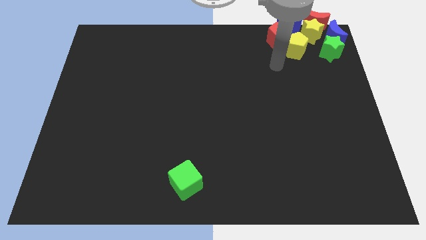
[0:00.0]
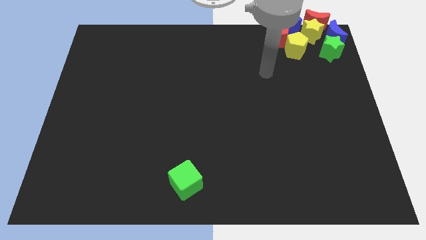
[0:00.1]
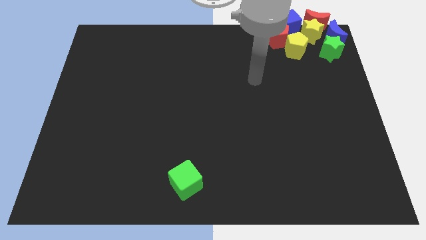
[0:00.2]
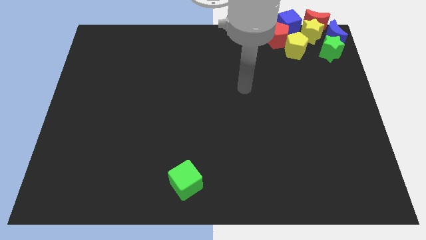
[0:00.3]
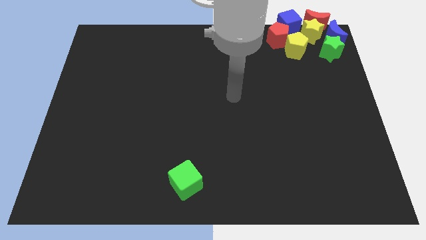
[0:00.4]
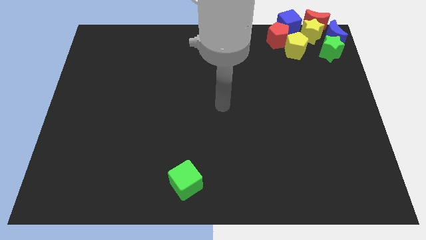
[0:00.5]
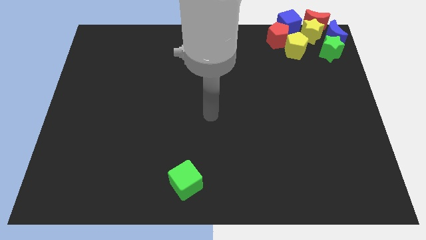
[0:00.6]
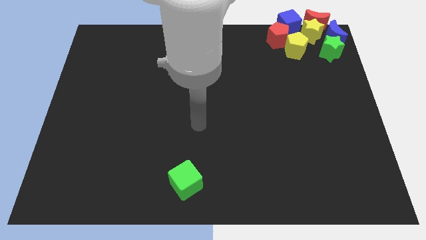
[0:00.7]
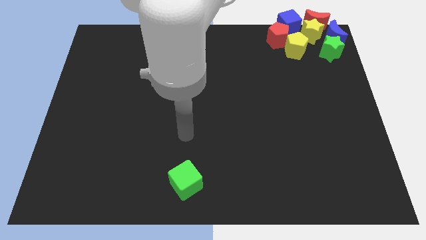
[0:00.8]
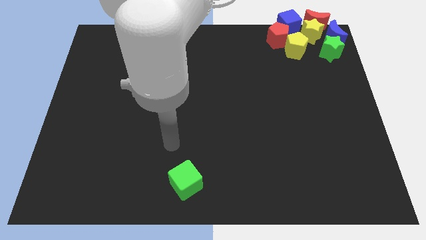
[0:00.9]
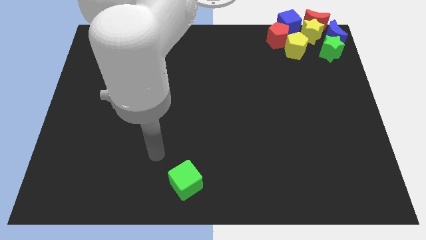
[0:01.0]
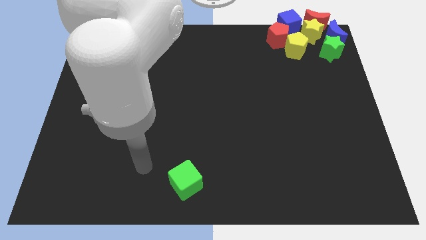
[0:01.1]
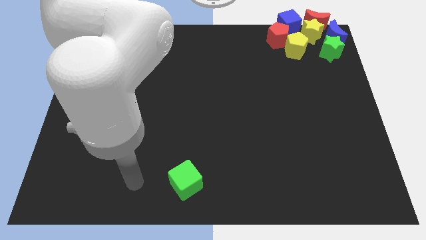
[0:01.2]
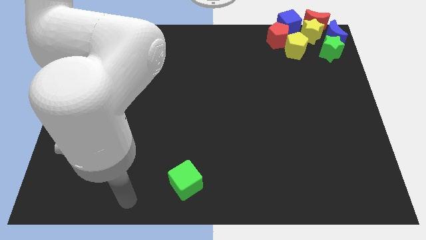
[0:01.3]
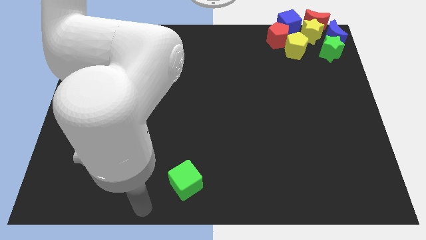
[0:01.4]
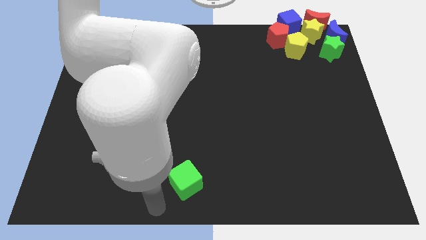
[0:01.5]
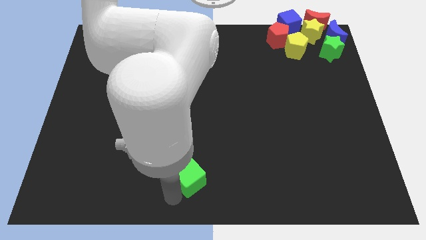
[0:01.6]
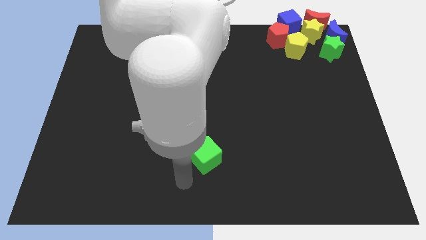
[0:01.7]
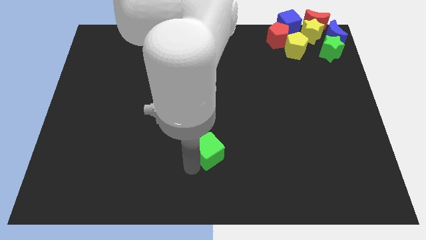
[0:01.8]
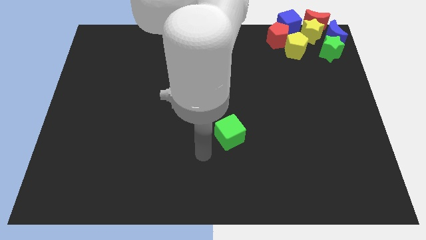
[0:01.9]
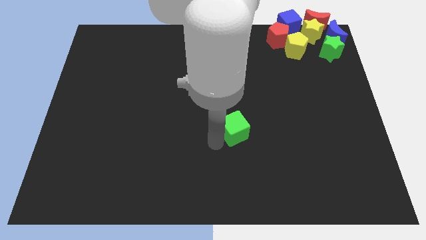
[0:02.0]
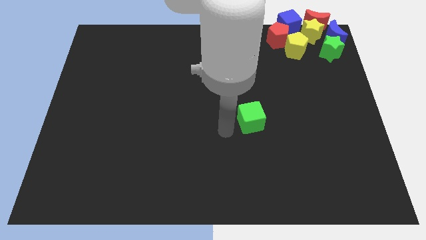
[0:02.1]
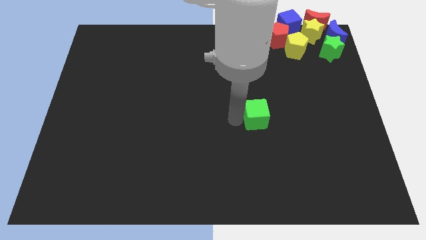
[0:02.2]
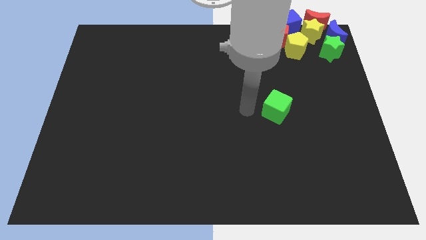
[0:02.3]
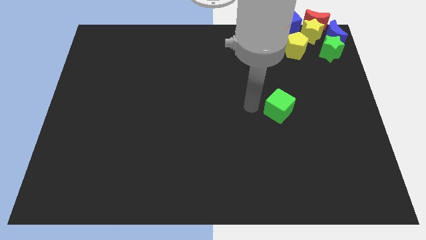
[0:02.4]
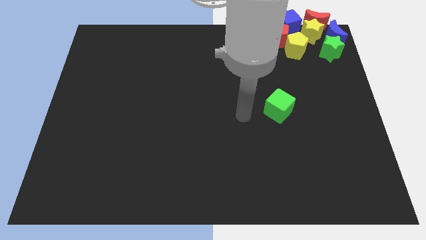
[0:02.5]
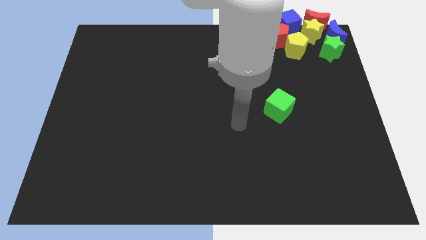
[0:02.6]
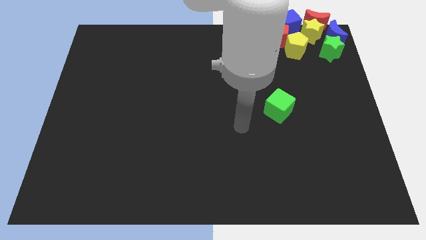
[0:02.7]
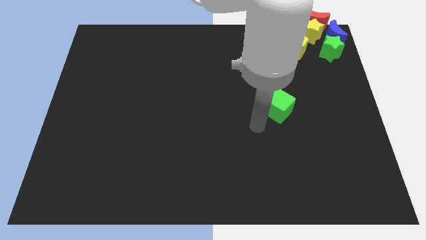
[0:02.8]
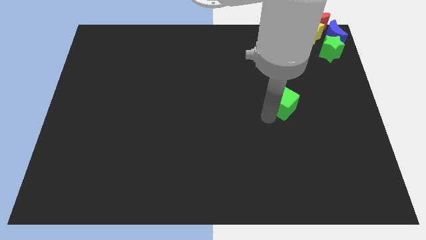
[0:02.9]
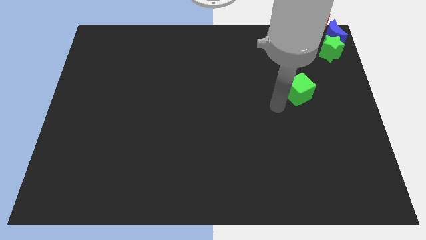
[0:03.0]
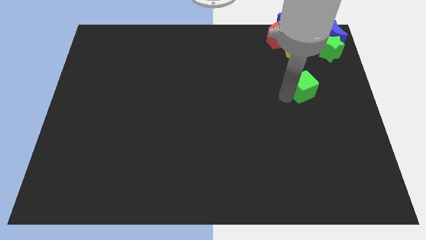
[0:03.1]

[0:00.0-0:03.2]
move green cube towards the green star

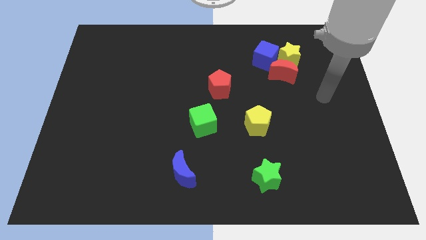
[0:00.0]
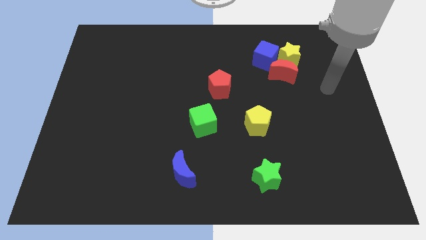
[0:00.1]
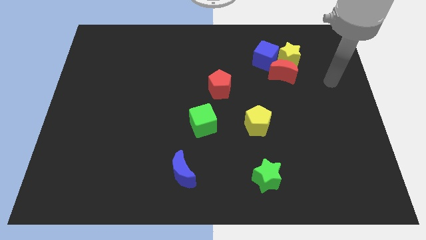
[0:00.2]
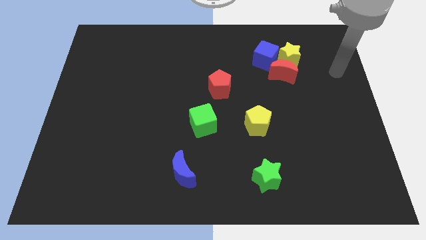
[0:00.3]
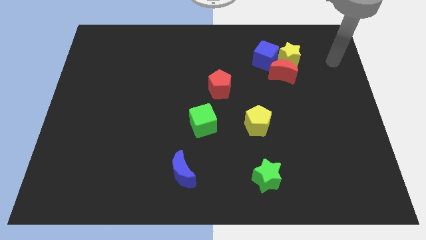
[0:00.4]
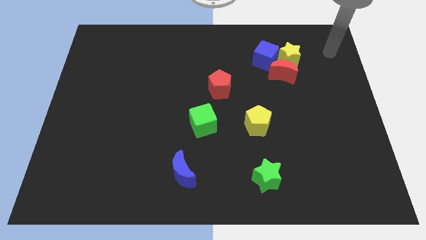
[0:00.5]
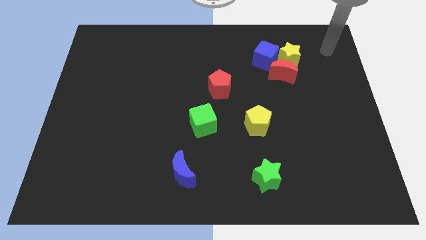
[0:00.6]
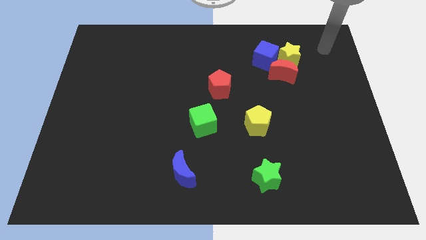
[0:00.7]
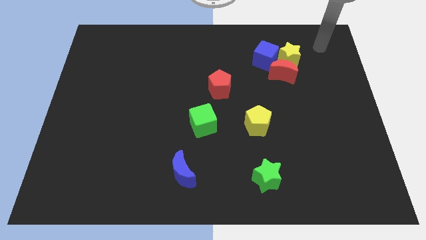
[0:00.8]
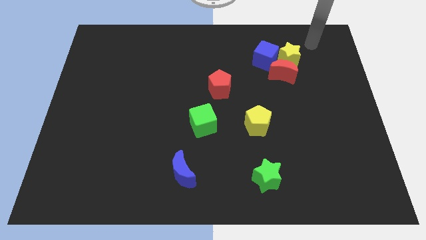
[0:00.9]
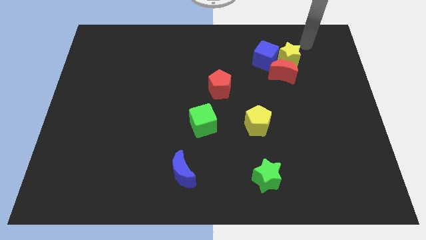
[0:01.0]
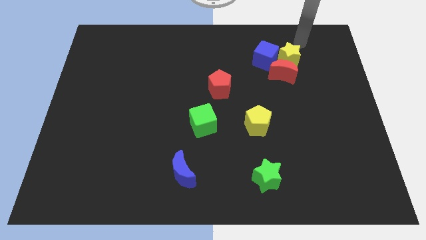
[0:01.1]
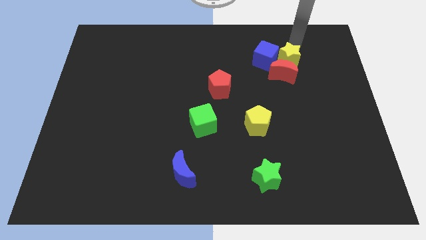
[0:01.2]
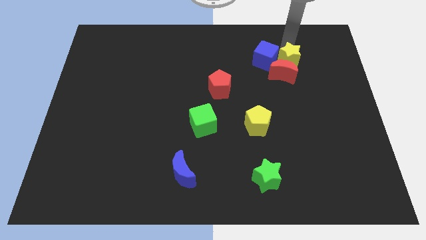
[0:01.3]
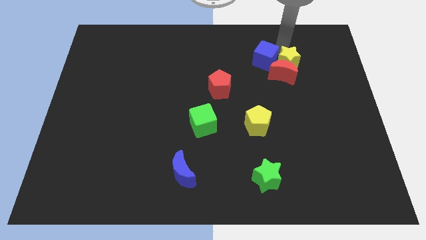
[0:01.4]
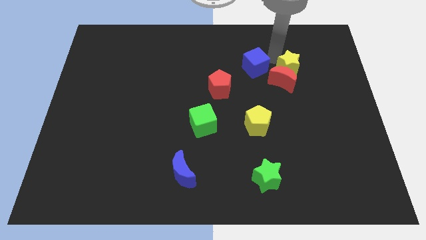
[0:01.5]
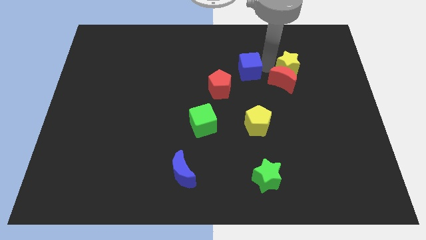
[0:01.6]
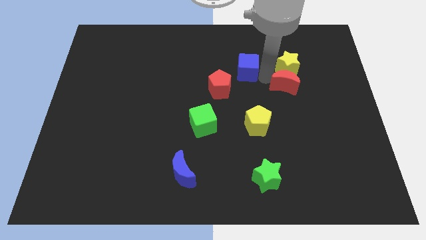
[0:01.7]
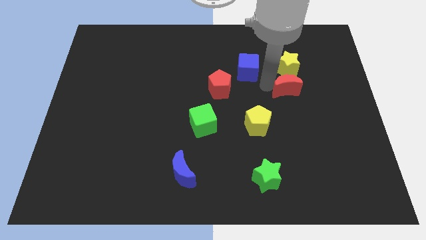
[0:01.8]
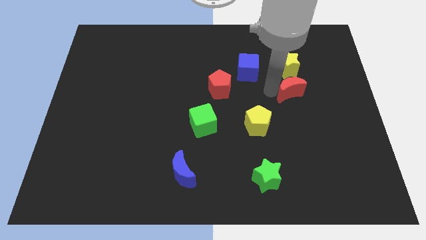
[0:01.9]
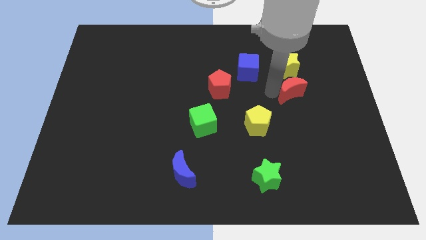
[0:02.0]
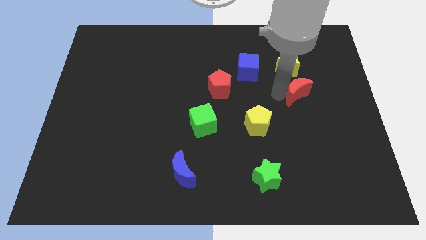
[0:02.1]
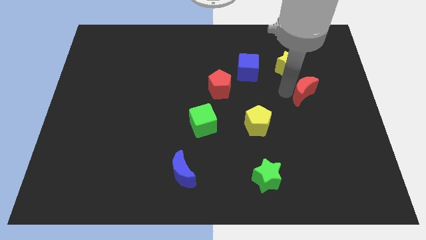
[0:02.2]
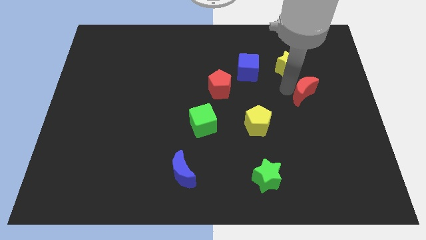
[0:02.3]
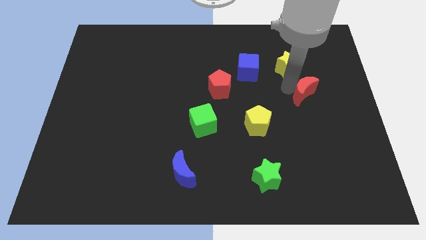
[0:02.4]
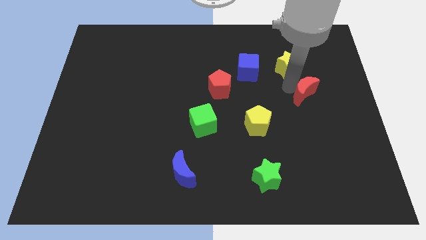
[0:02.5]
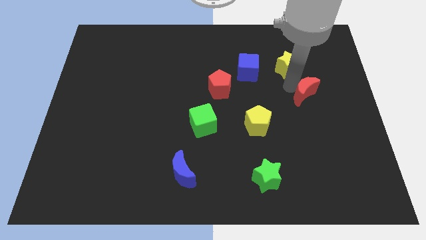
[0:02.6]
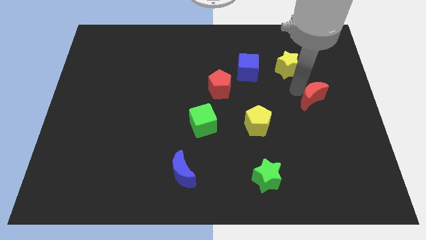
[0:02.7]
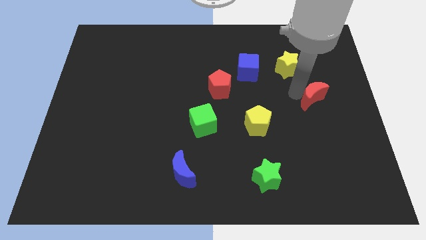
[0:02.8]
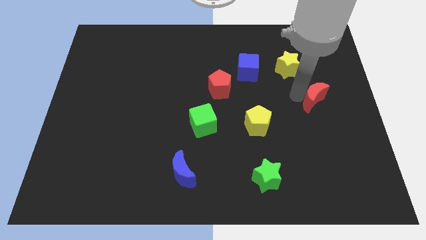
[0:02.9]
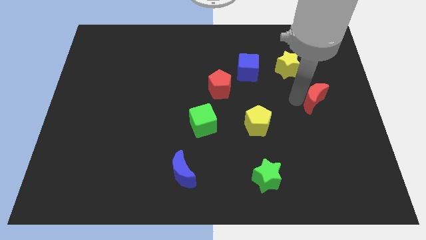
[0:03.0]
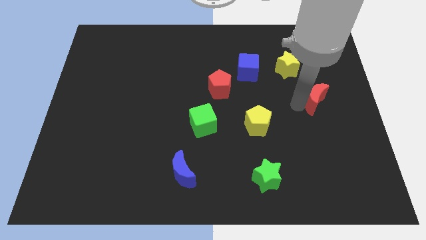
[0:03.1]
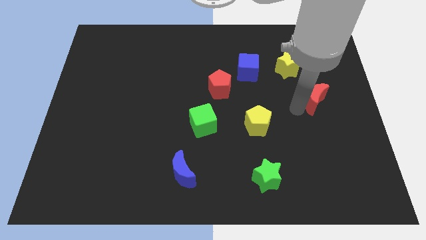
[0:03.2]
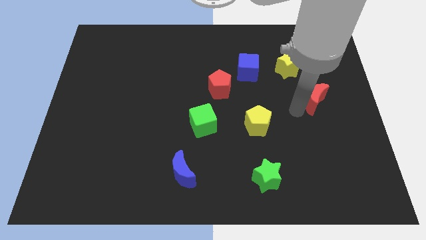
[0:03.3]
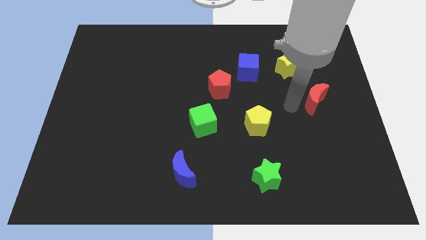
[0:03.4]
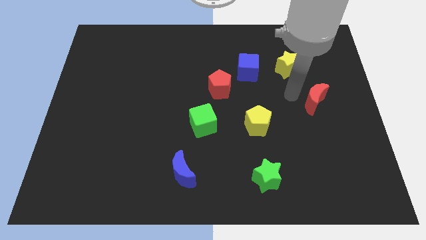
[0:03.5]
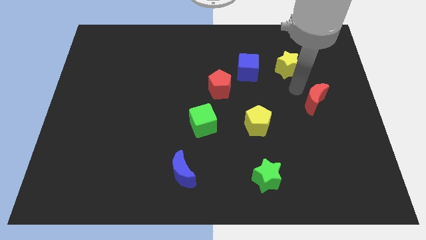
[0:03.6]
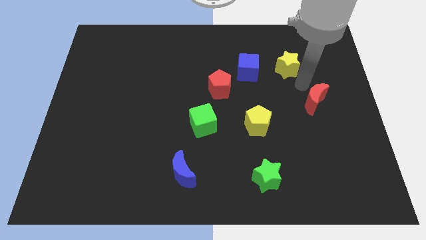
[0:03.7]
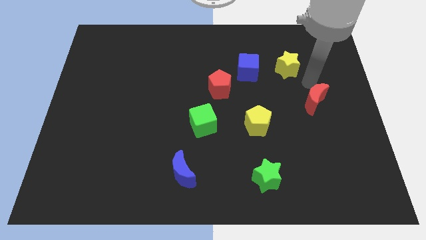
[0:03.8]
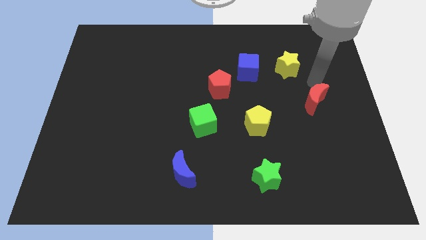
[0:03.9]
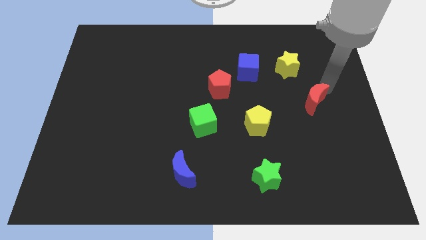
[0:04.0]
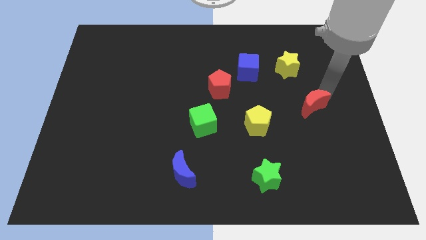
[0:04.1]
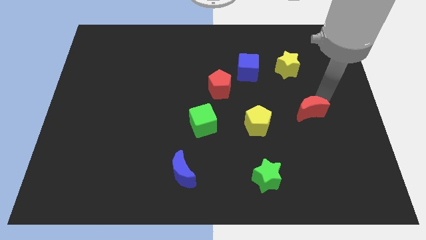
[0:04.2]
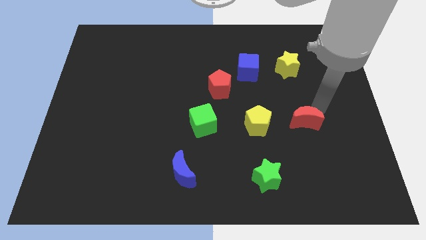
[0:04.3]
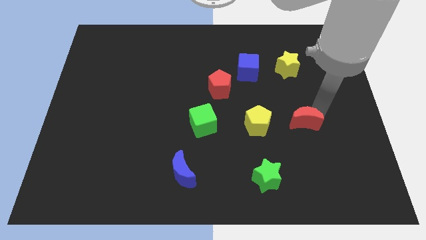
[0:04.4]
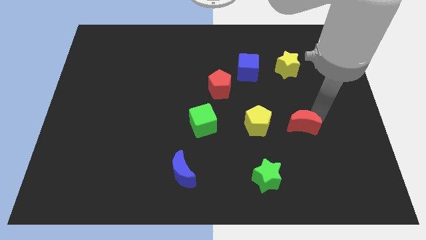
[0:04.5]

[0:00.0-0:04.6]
separate red moon from the yellow star and blue cube

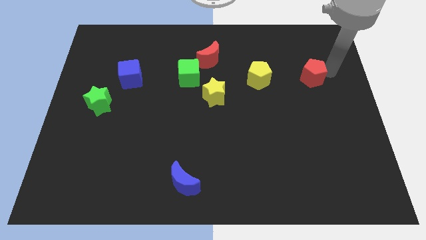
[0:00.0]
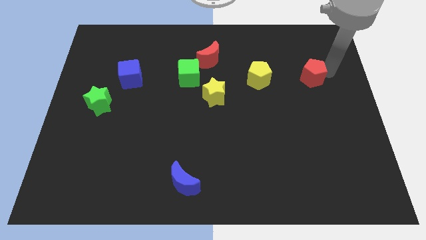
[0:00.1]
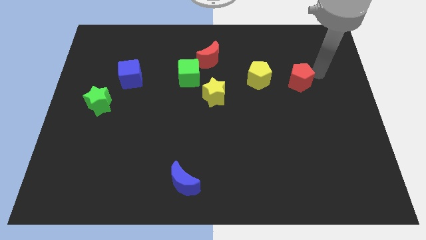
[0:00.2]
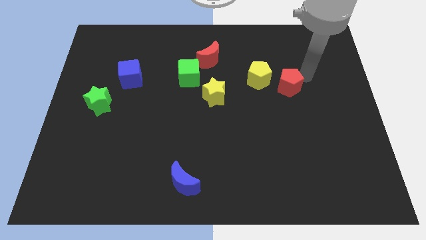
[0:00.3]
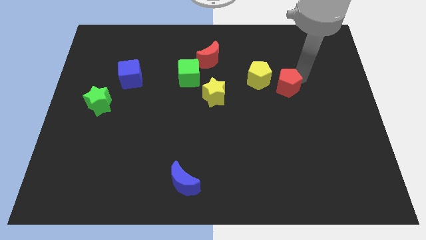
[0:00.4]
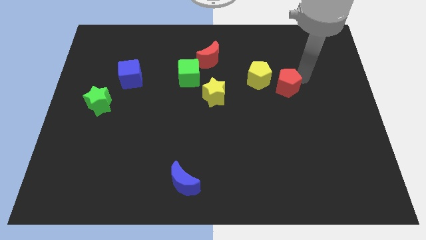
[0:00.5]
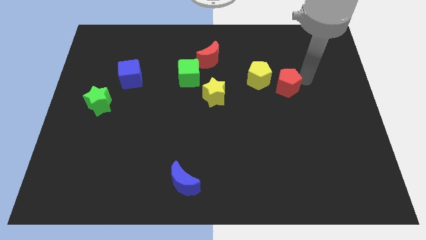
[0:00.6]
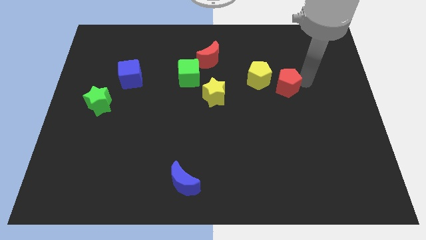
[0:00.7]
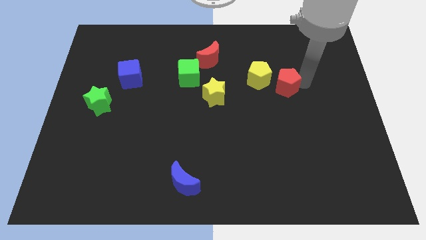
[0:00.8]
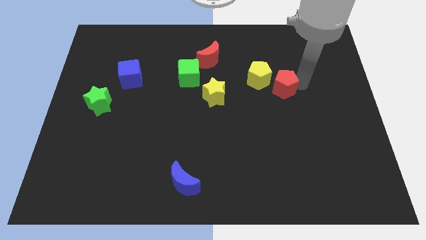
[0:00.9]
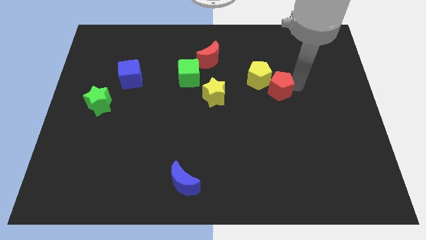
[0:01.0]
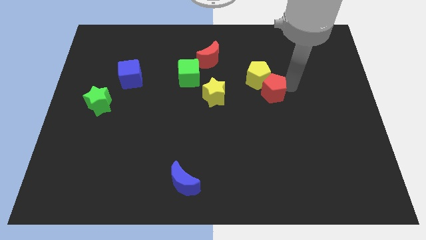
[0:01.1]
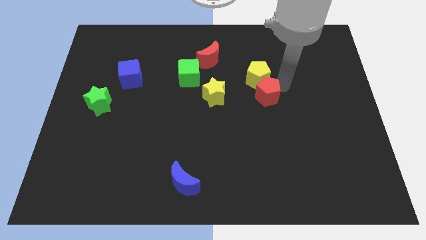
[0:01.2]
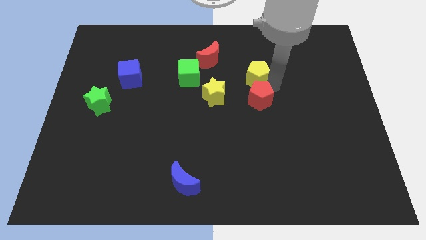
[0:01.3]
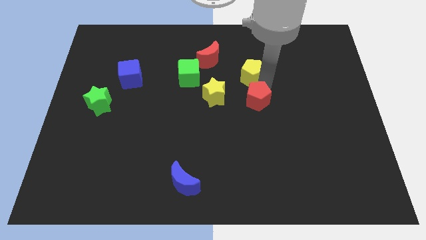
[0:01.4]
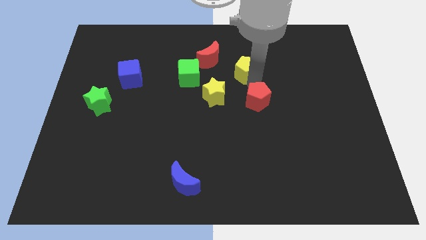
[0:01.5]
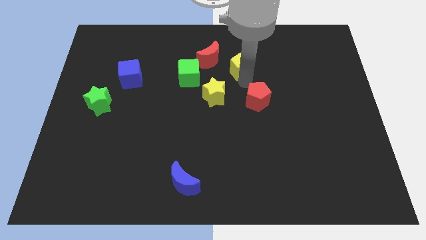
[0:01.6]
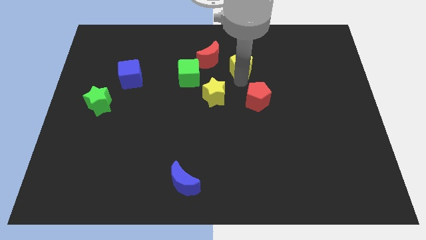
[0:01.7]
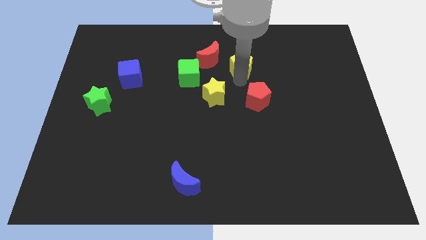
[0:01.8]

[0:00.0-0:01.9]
place the yellow pentagon to the top left of the red pentagon
